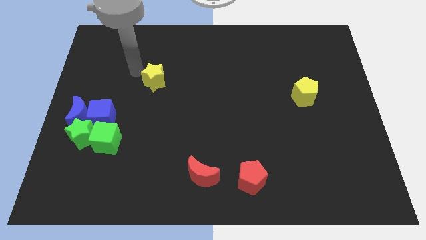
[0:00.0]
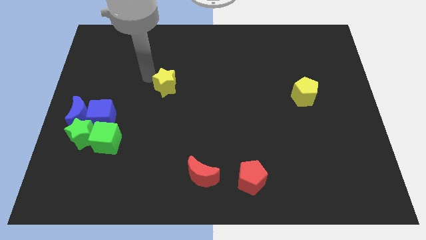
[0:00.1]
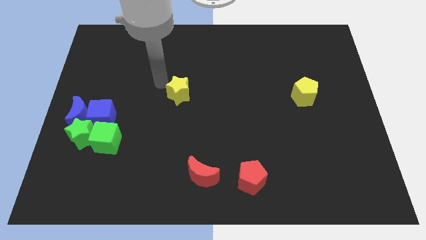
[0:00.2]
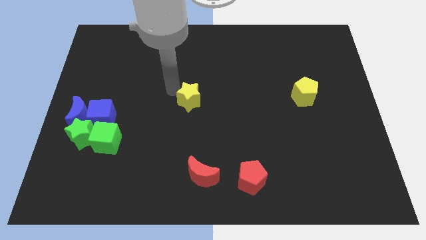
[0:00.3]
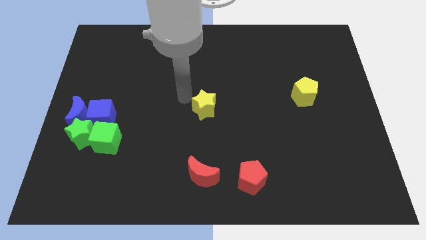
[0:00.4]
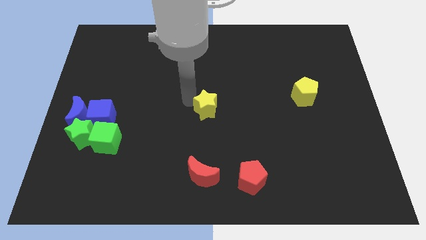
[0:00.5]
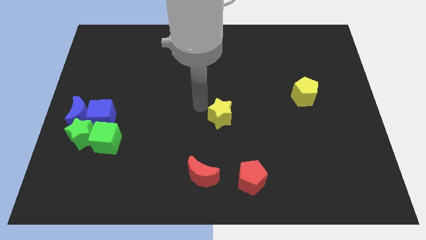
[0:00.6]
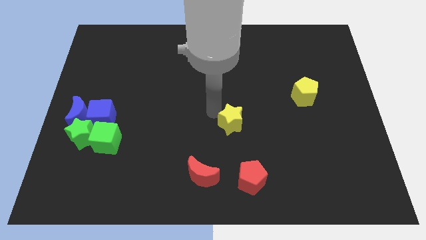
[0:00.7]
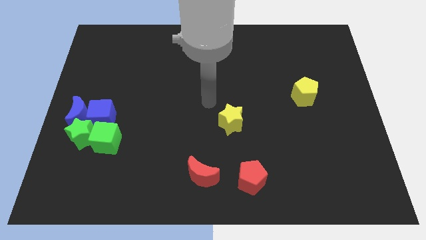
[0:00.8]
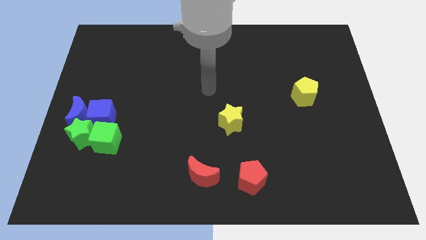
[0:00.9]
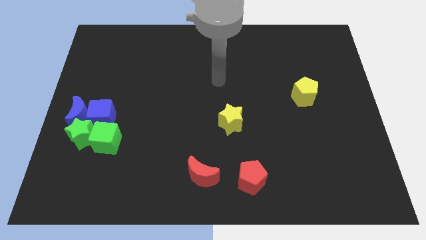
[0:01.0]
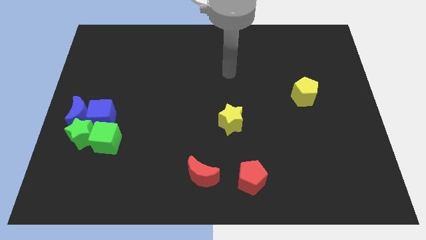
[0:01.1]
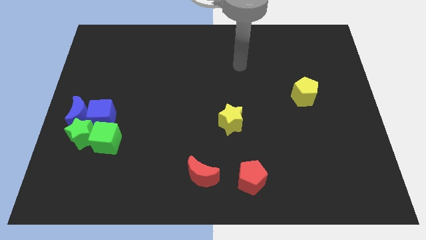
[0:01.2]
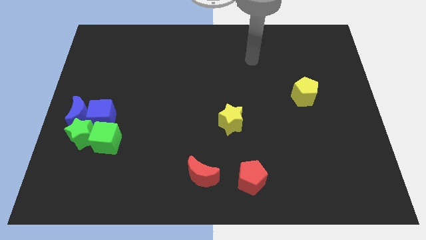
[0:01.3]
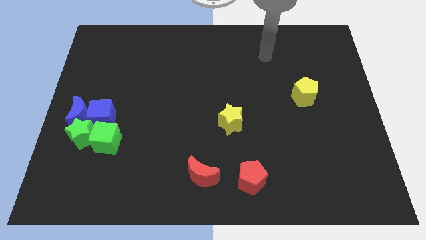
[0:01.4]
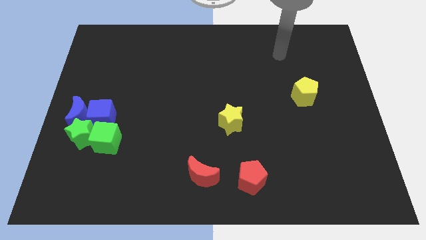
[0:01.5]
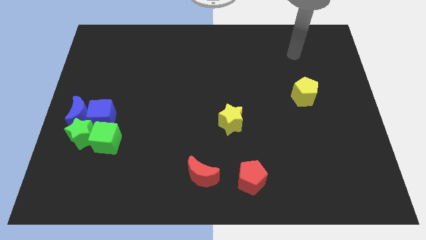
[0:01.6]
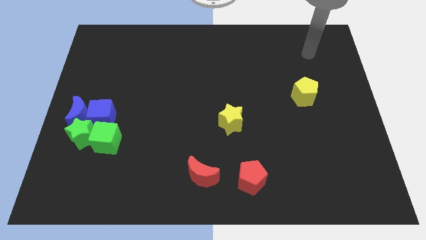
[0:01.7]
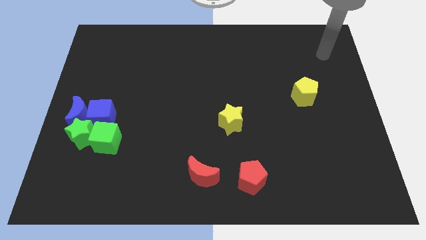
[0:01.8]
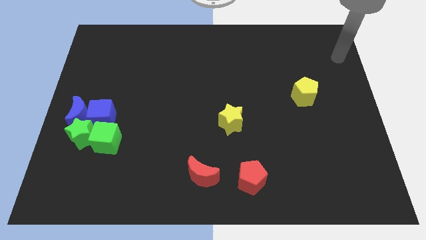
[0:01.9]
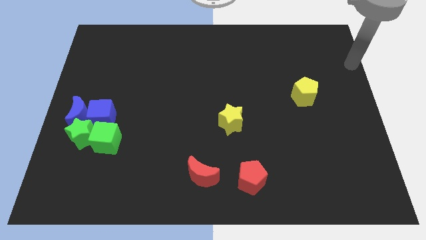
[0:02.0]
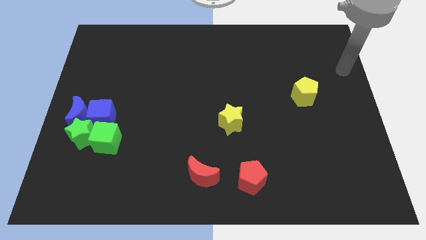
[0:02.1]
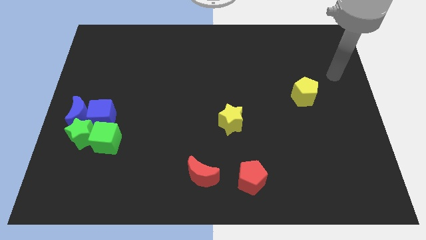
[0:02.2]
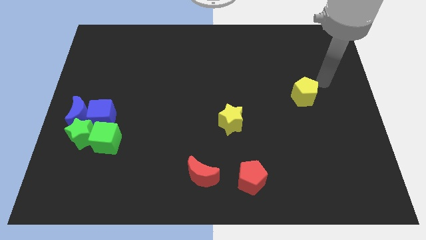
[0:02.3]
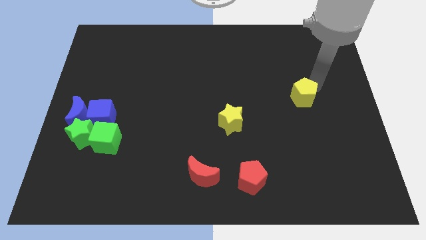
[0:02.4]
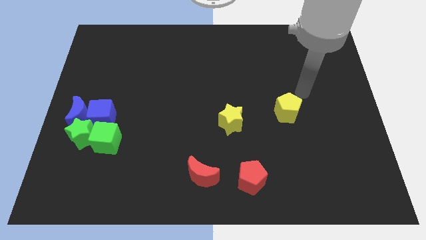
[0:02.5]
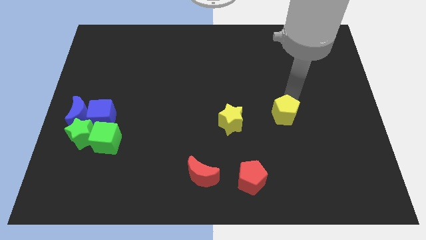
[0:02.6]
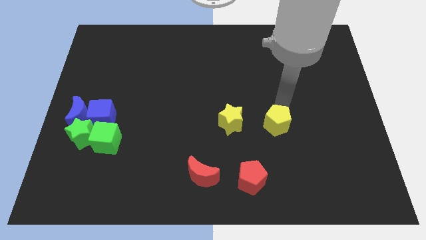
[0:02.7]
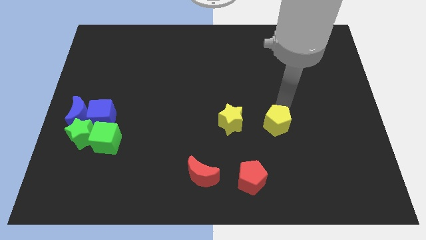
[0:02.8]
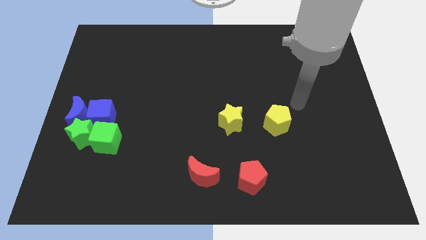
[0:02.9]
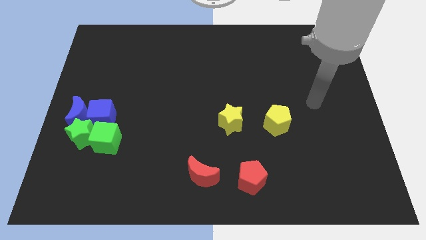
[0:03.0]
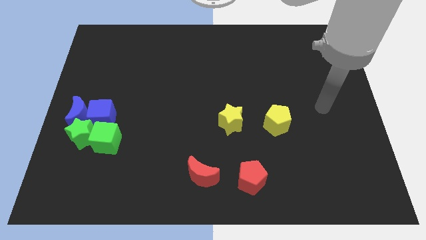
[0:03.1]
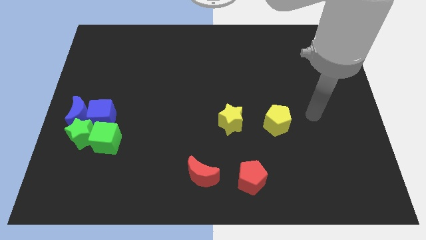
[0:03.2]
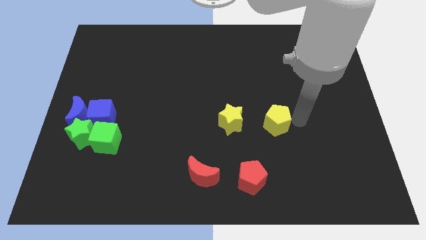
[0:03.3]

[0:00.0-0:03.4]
move the yellow pentagon diagonal to the red pentagon

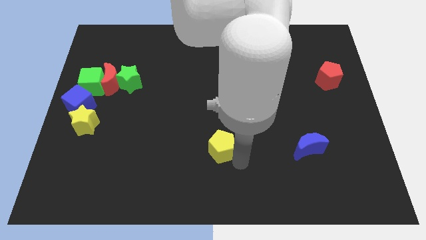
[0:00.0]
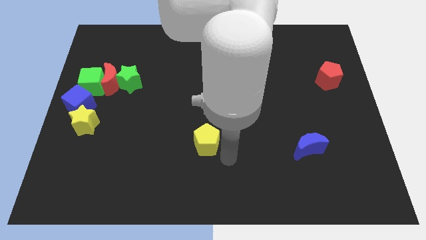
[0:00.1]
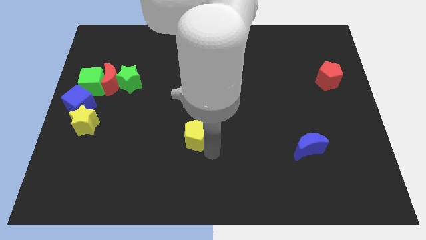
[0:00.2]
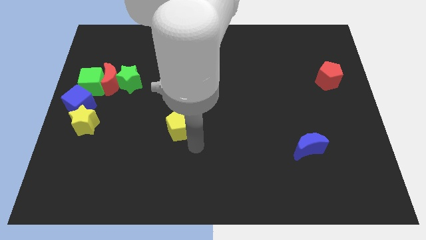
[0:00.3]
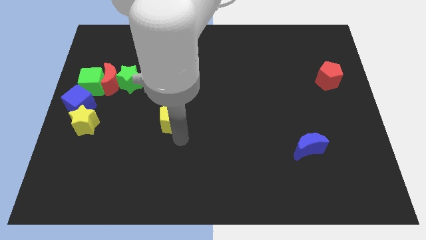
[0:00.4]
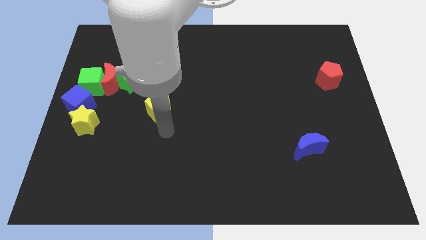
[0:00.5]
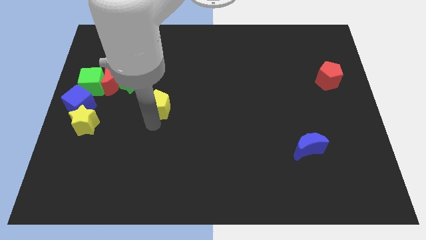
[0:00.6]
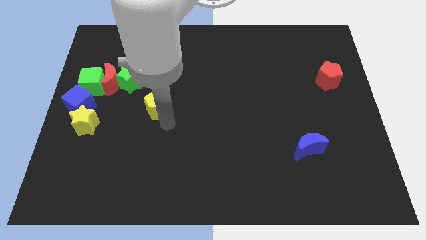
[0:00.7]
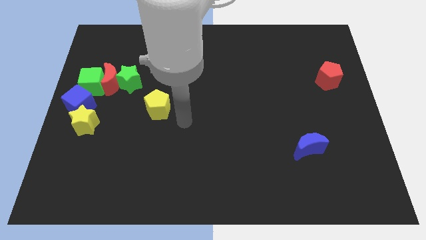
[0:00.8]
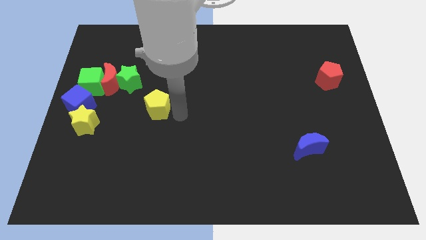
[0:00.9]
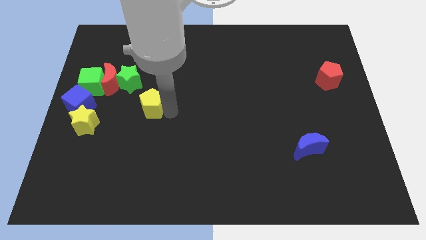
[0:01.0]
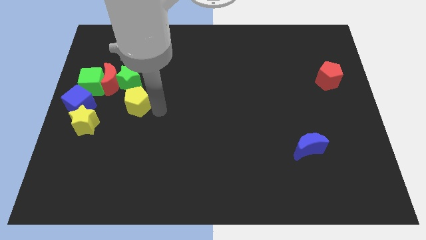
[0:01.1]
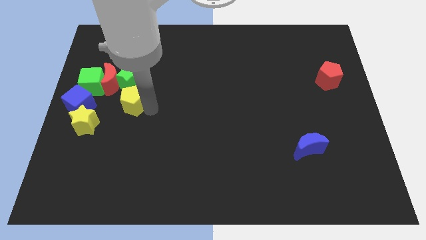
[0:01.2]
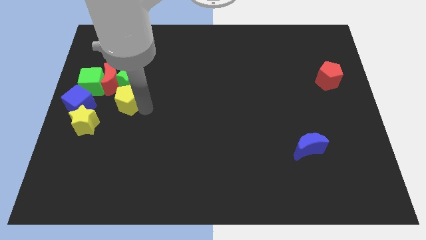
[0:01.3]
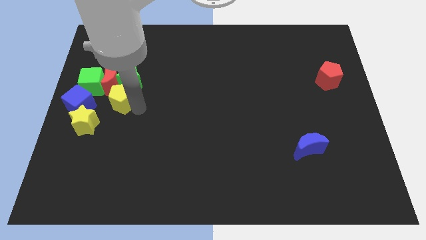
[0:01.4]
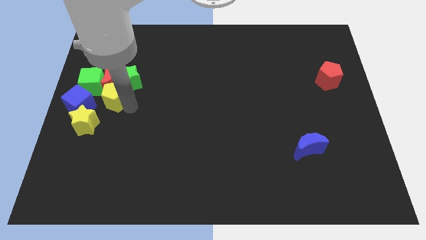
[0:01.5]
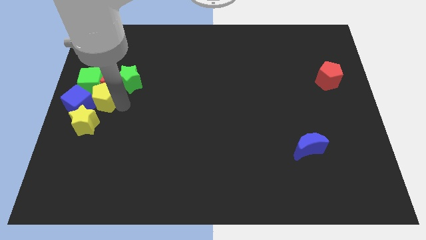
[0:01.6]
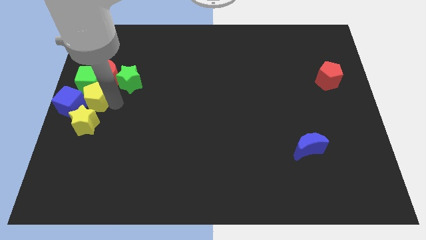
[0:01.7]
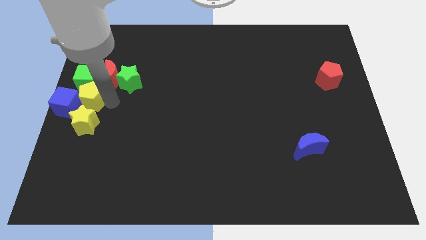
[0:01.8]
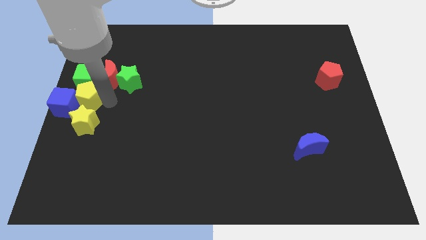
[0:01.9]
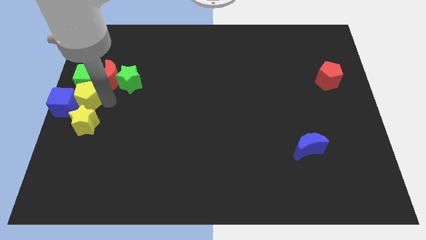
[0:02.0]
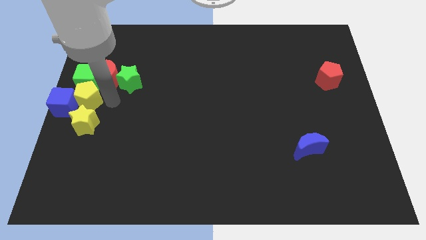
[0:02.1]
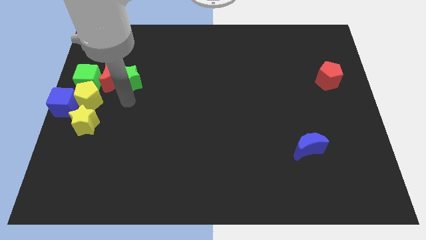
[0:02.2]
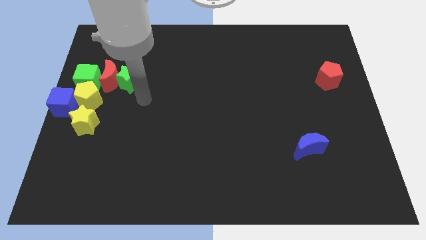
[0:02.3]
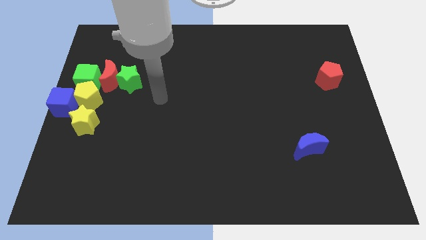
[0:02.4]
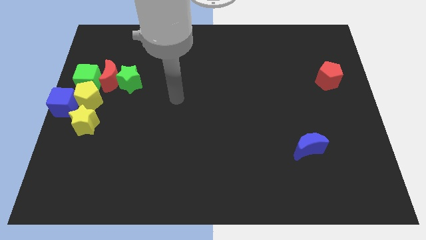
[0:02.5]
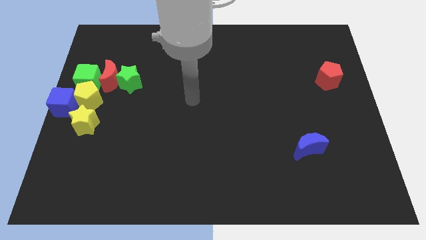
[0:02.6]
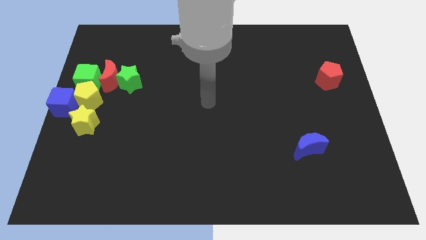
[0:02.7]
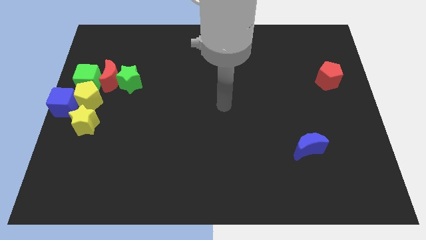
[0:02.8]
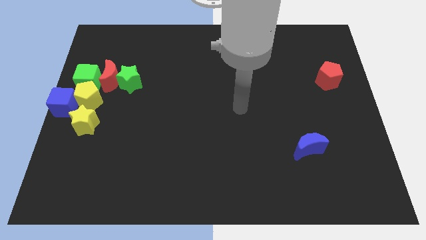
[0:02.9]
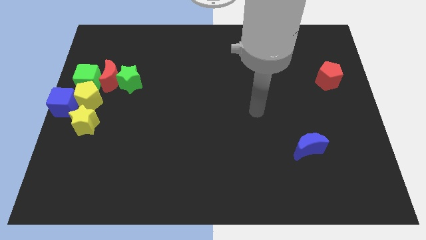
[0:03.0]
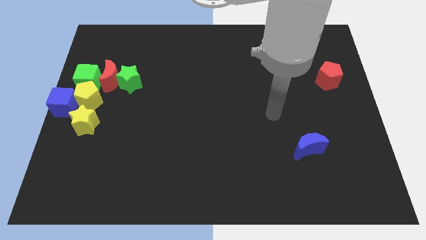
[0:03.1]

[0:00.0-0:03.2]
move the yellow pentagon beside the blue cube

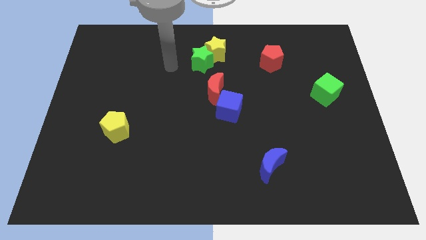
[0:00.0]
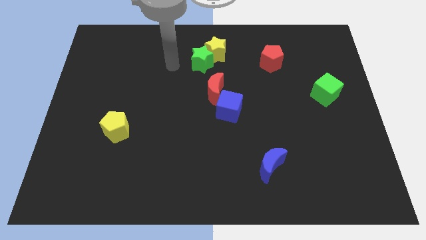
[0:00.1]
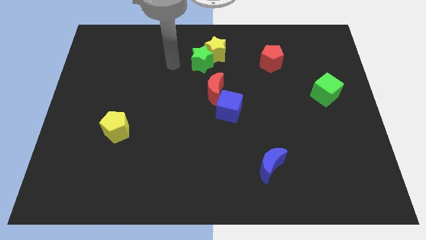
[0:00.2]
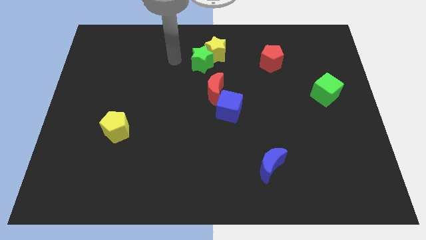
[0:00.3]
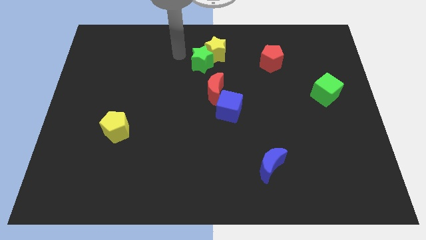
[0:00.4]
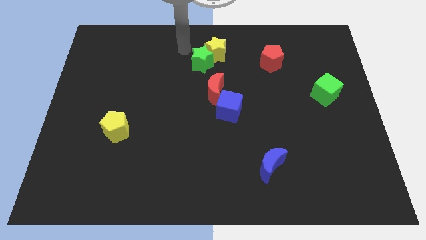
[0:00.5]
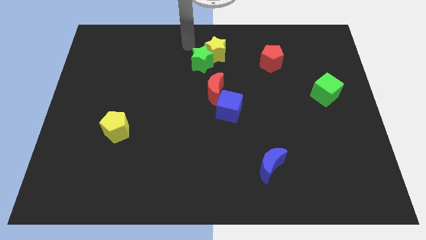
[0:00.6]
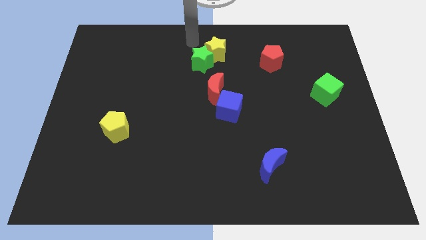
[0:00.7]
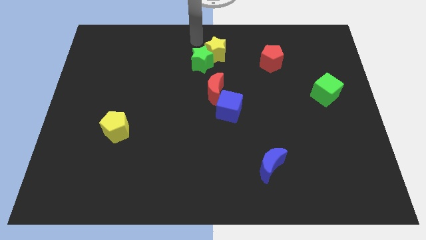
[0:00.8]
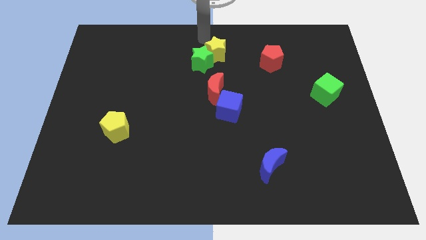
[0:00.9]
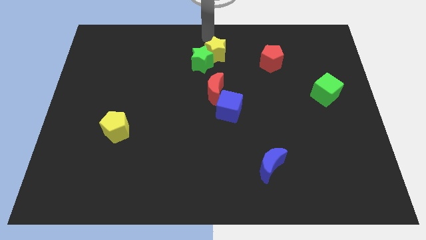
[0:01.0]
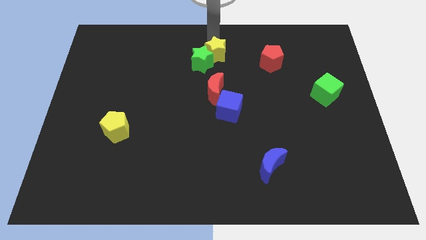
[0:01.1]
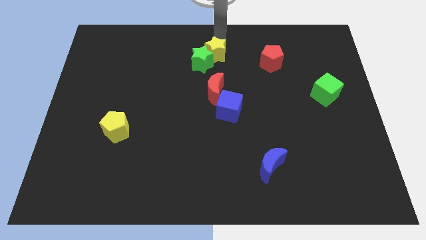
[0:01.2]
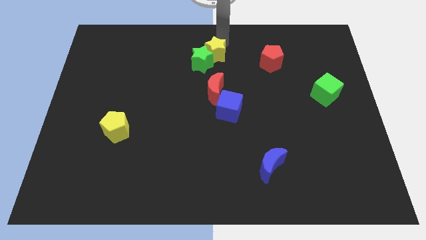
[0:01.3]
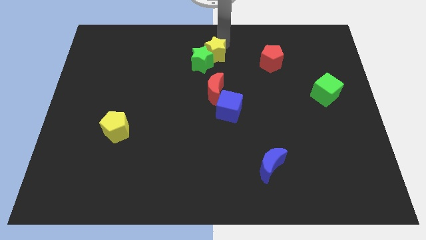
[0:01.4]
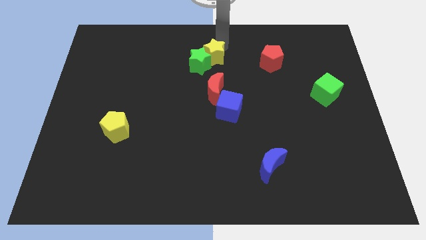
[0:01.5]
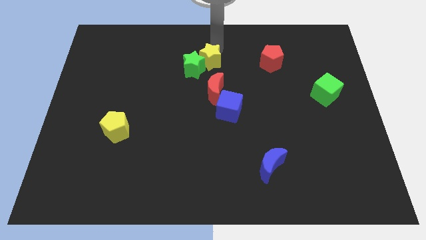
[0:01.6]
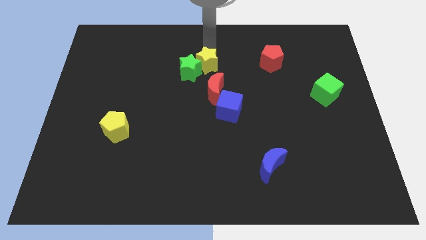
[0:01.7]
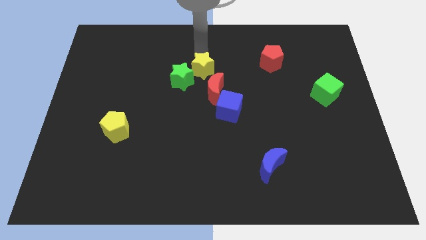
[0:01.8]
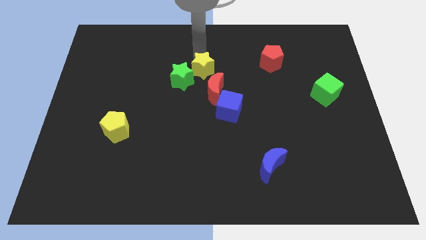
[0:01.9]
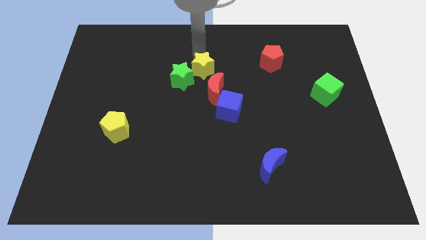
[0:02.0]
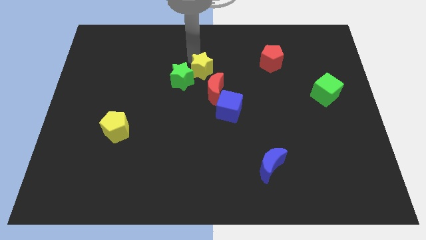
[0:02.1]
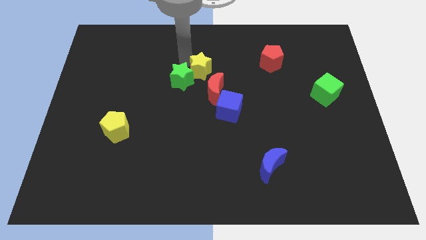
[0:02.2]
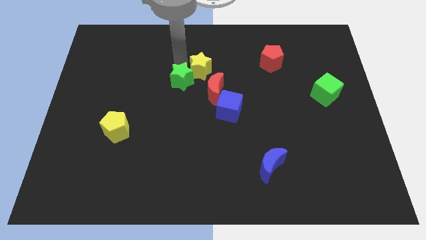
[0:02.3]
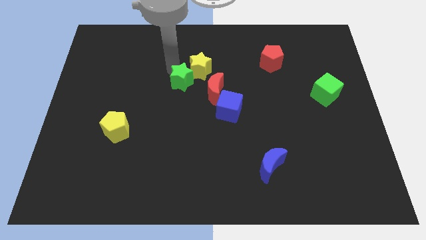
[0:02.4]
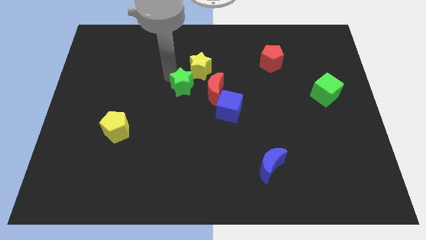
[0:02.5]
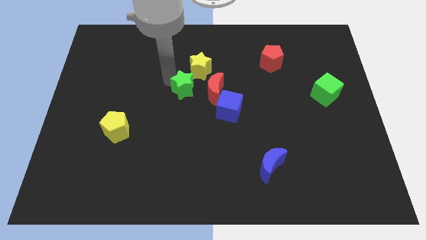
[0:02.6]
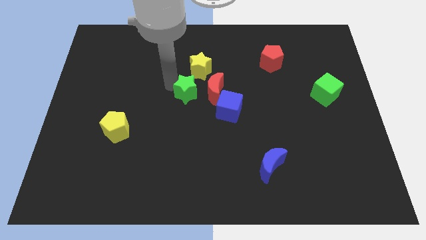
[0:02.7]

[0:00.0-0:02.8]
slightly push the yellow star into green star
